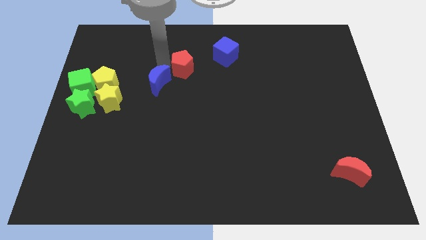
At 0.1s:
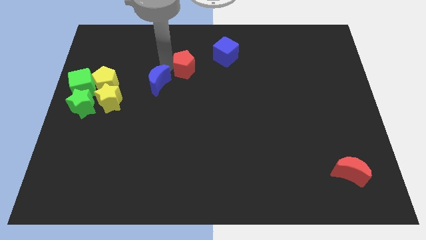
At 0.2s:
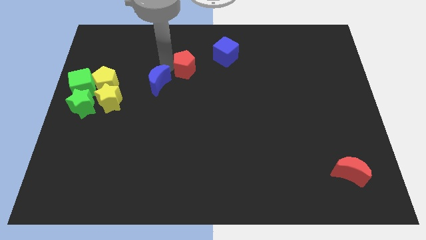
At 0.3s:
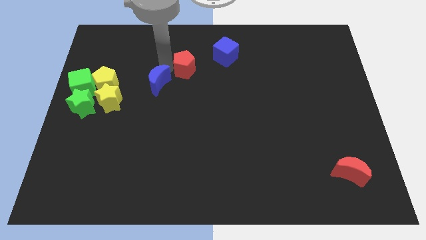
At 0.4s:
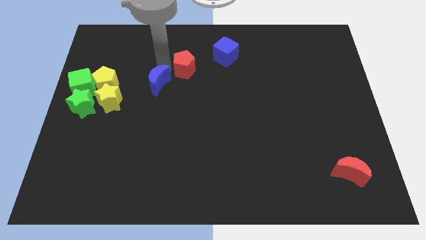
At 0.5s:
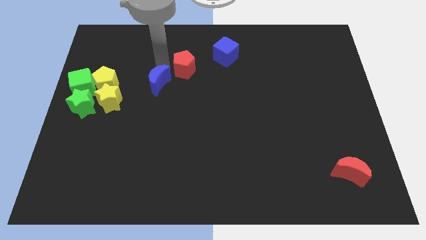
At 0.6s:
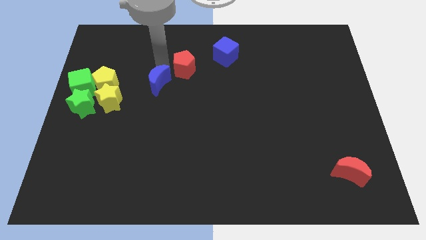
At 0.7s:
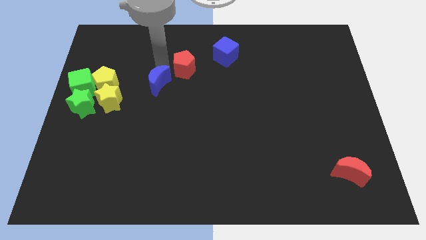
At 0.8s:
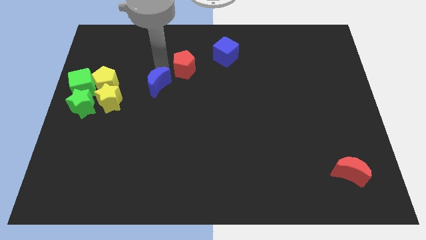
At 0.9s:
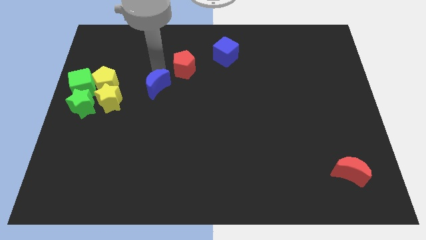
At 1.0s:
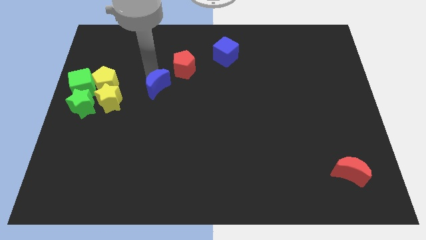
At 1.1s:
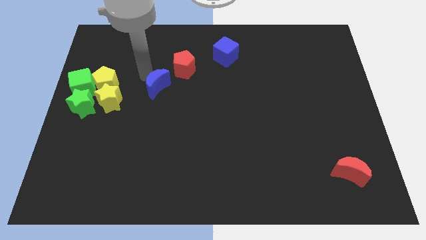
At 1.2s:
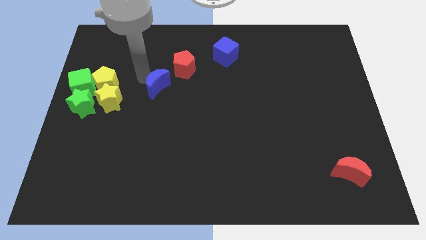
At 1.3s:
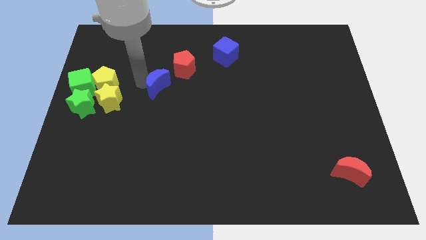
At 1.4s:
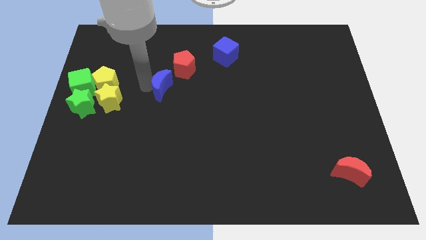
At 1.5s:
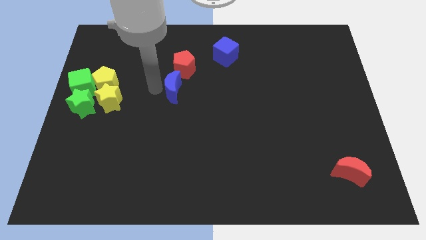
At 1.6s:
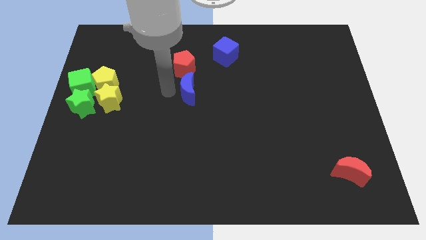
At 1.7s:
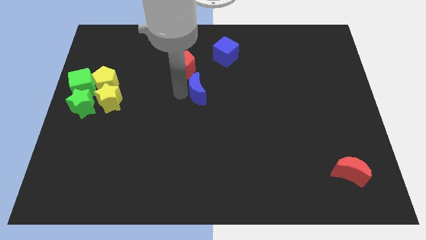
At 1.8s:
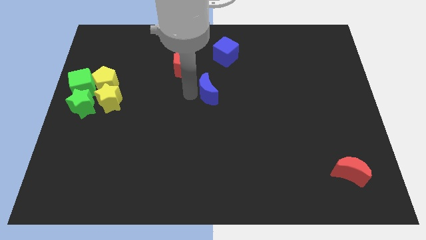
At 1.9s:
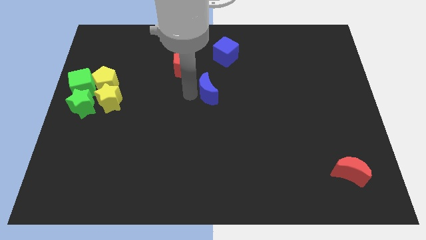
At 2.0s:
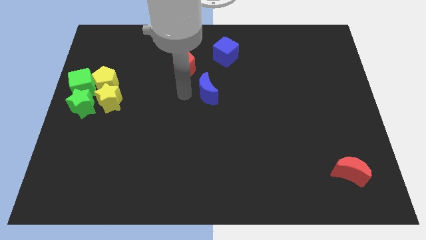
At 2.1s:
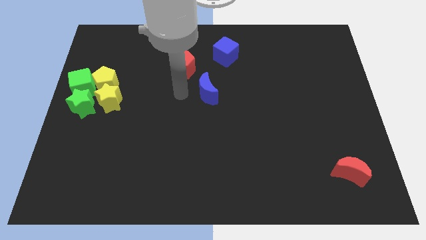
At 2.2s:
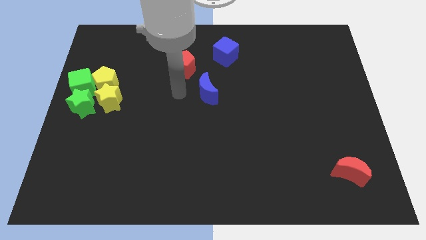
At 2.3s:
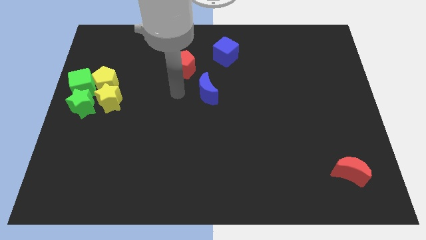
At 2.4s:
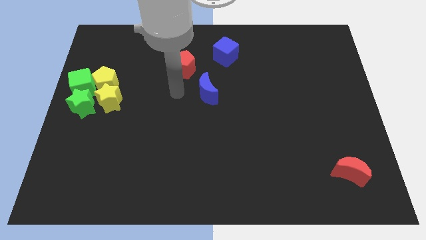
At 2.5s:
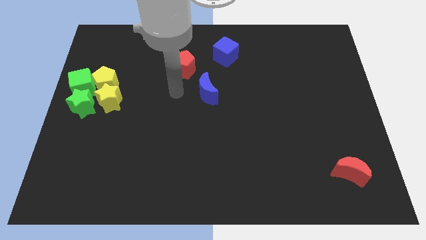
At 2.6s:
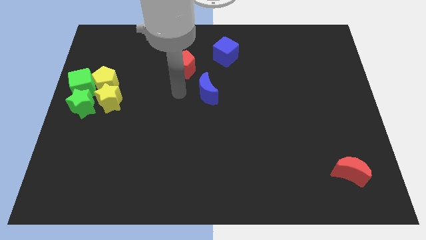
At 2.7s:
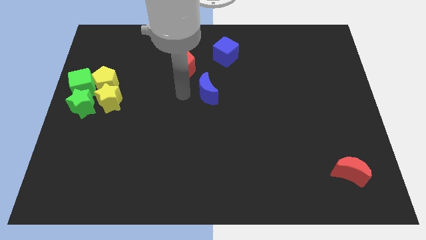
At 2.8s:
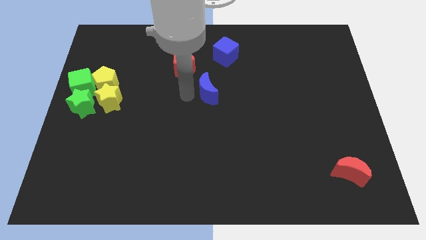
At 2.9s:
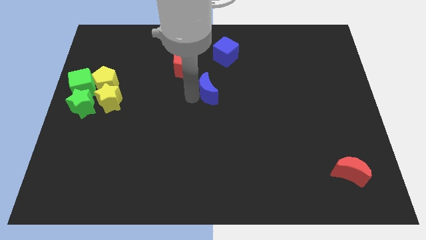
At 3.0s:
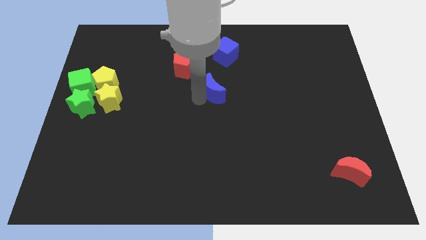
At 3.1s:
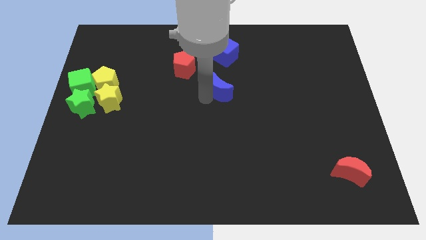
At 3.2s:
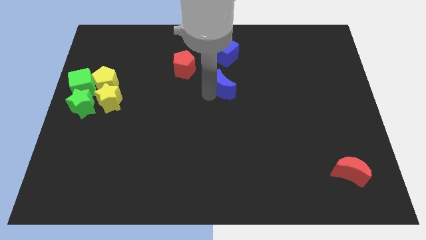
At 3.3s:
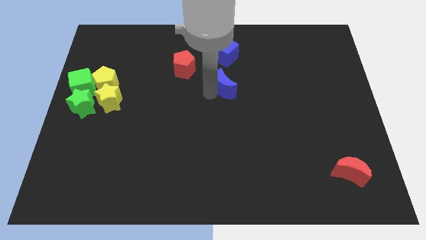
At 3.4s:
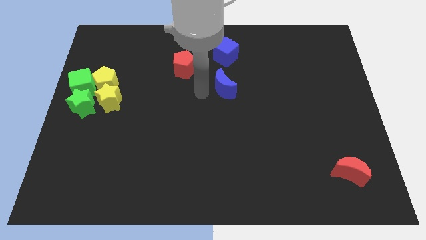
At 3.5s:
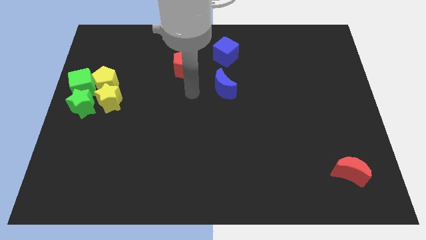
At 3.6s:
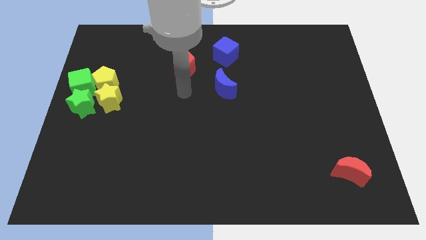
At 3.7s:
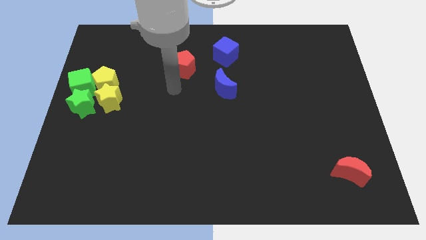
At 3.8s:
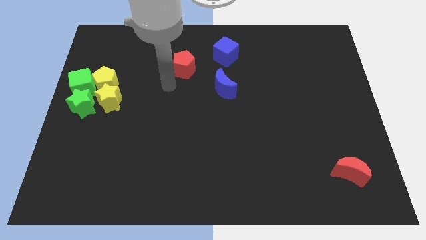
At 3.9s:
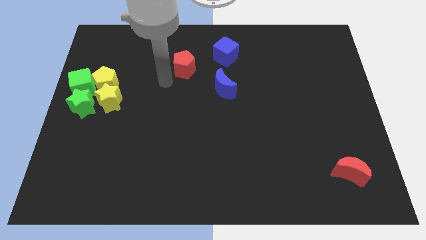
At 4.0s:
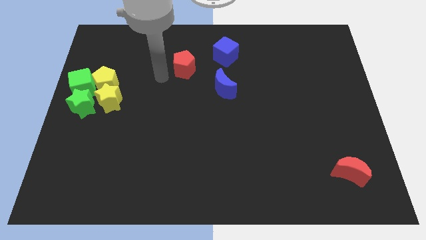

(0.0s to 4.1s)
push the blue crescent vertically at the bottom of the blue cube

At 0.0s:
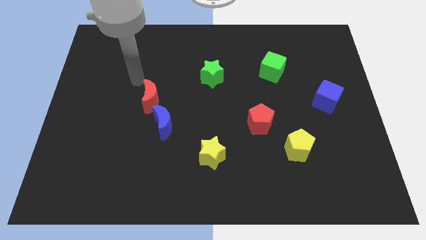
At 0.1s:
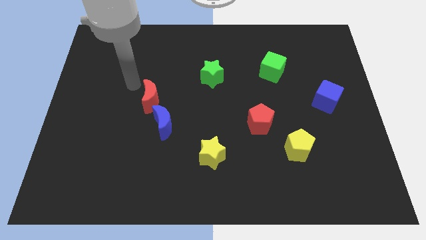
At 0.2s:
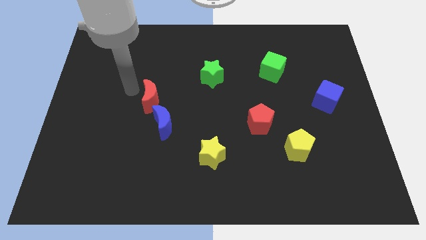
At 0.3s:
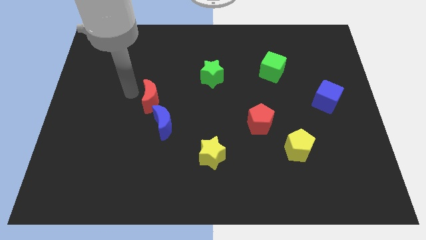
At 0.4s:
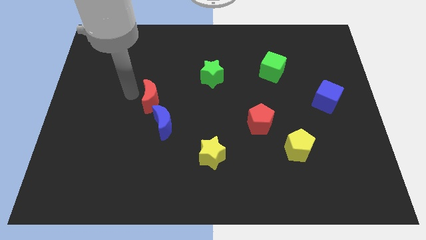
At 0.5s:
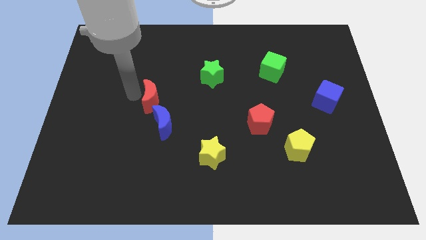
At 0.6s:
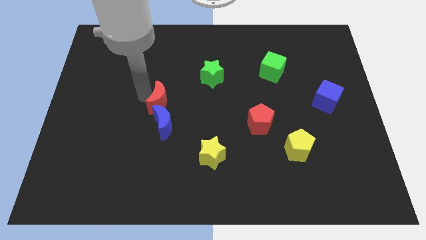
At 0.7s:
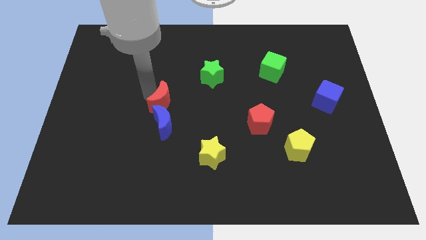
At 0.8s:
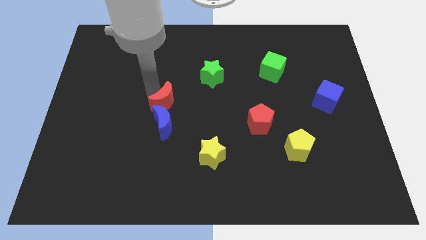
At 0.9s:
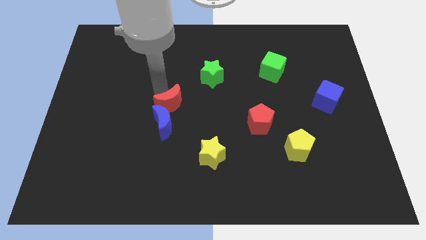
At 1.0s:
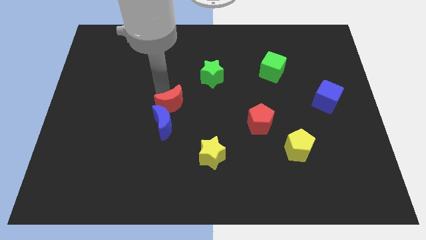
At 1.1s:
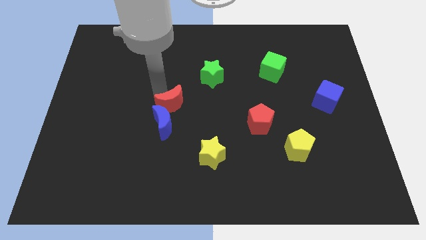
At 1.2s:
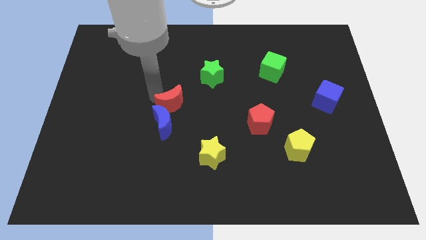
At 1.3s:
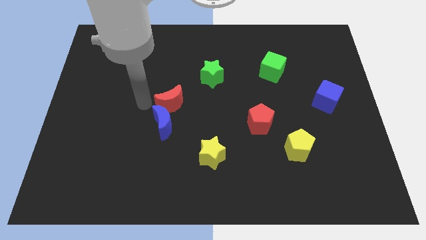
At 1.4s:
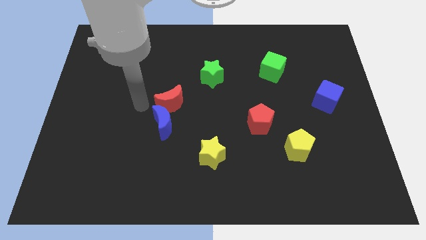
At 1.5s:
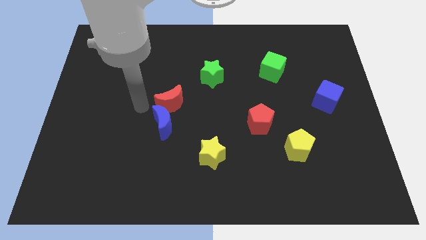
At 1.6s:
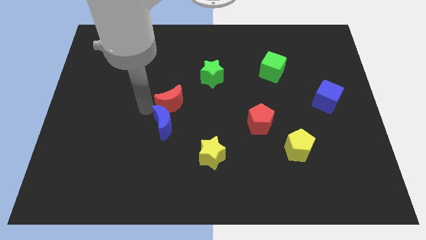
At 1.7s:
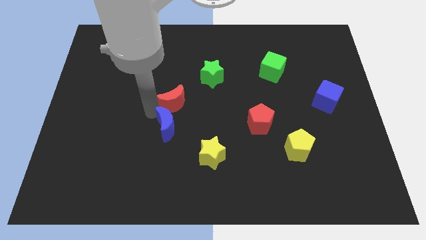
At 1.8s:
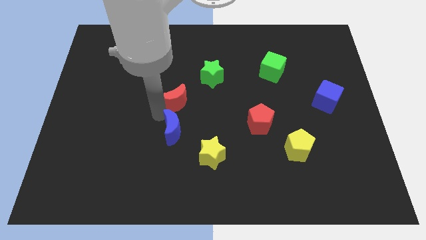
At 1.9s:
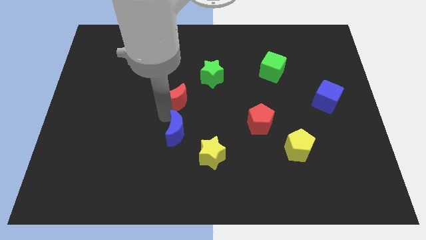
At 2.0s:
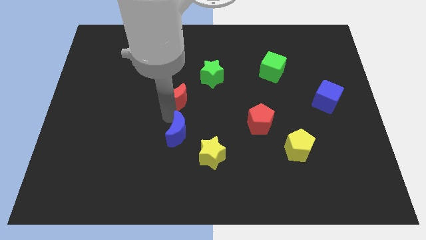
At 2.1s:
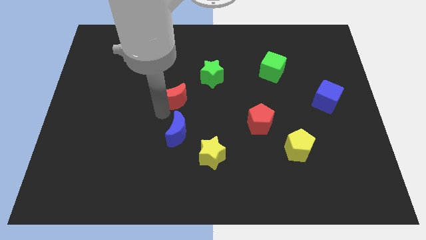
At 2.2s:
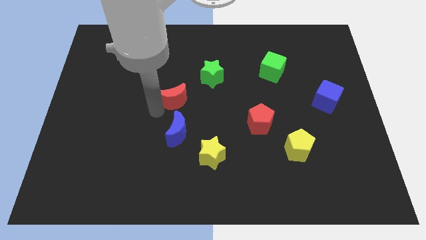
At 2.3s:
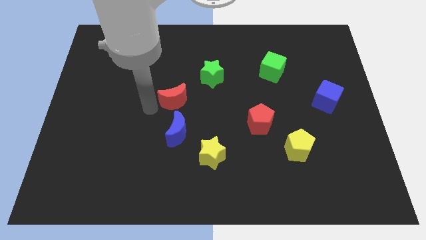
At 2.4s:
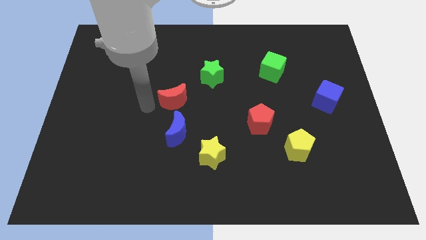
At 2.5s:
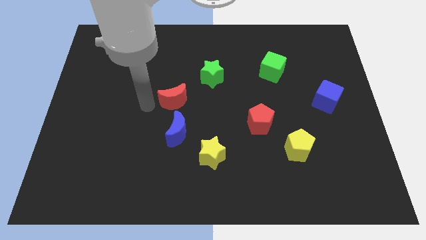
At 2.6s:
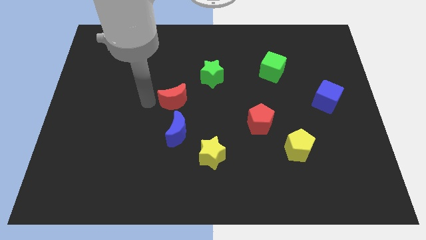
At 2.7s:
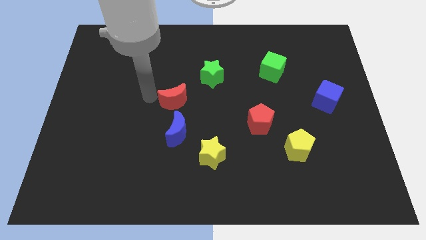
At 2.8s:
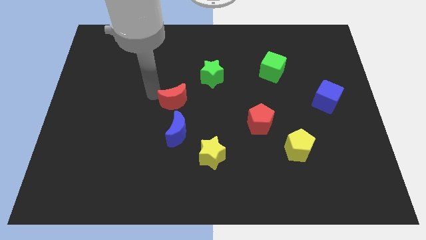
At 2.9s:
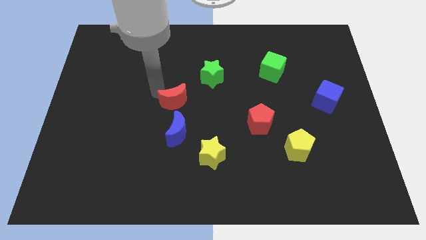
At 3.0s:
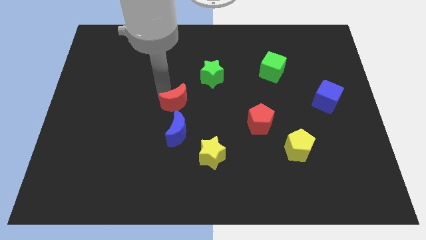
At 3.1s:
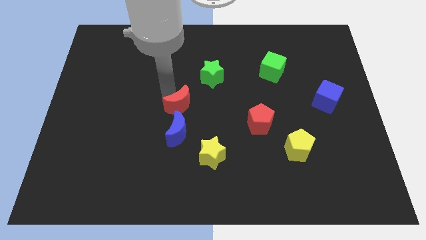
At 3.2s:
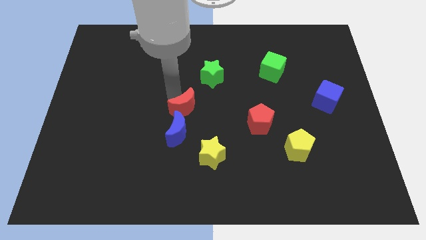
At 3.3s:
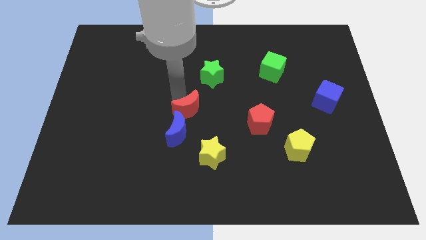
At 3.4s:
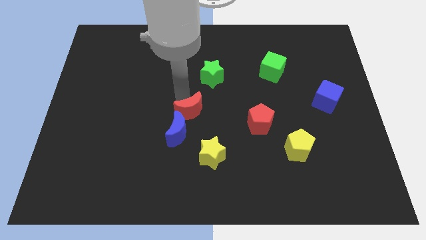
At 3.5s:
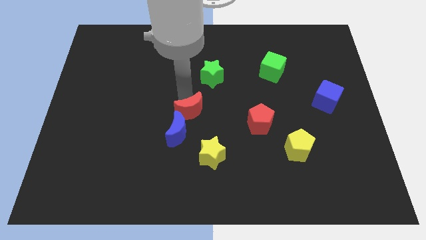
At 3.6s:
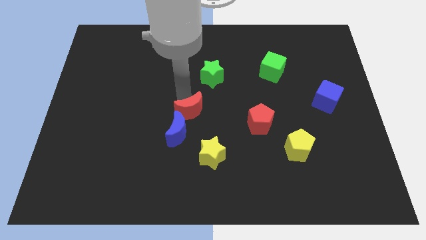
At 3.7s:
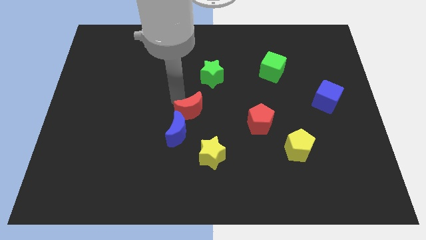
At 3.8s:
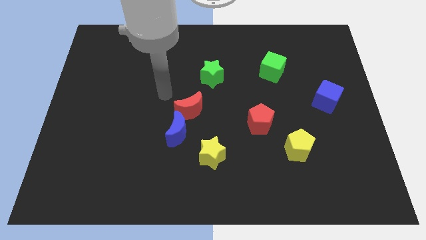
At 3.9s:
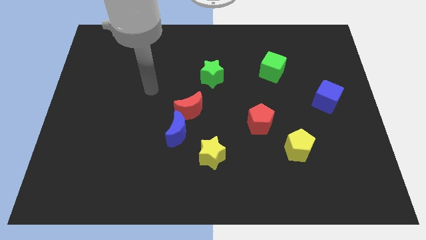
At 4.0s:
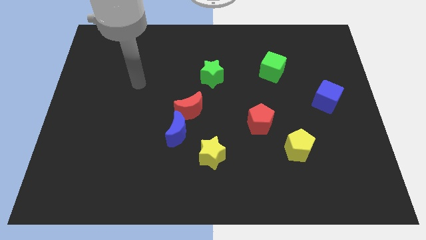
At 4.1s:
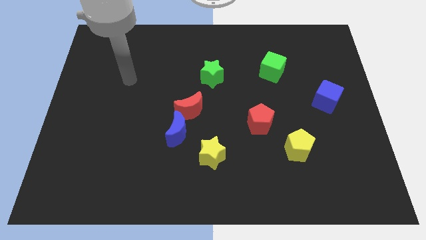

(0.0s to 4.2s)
slightly move the red moon towards the right

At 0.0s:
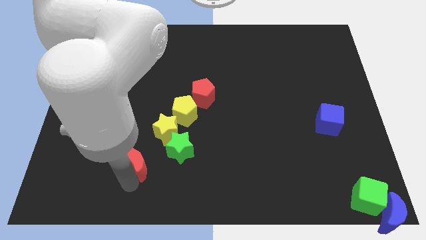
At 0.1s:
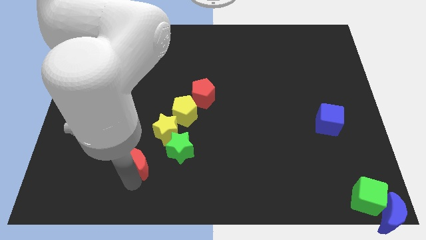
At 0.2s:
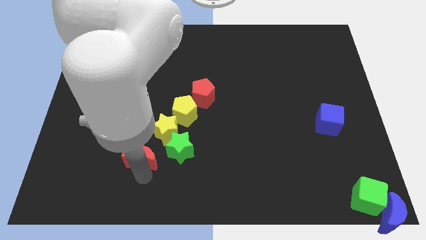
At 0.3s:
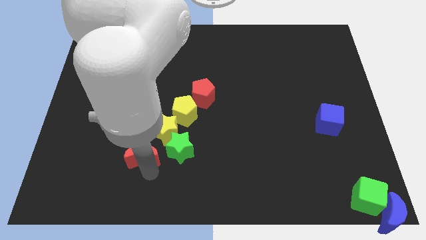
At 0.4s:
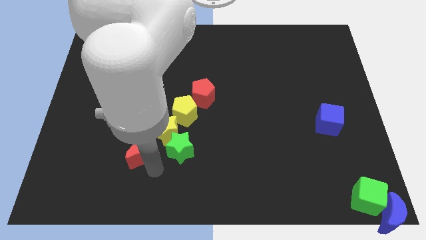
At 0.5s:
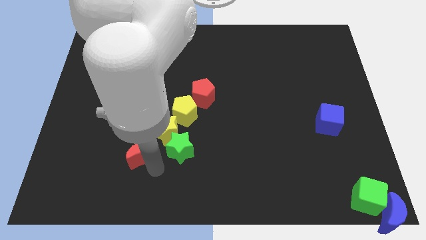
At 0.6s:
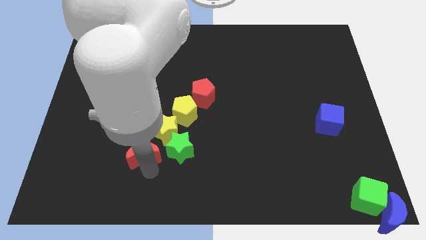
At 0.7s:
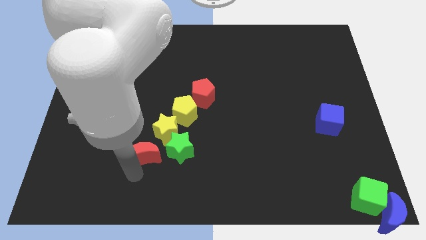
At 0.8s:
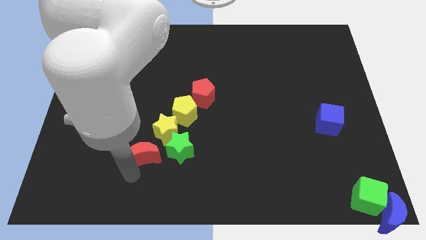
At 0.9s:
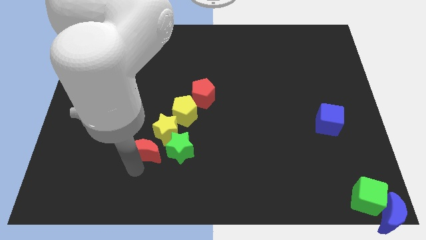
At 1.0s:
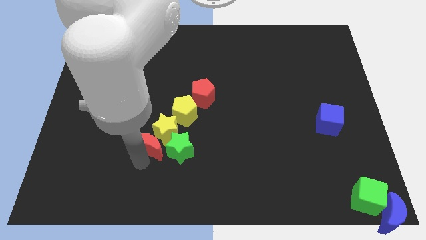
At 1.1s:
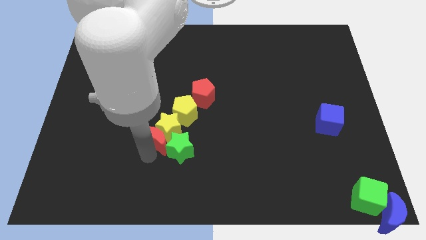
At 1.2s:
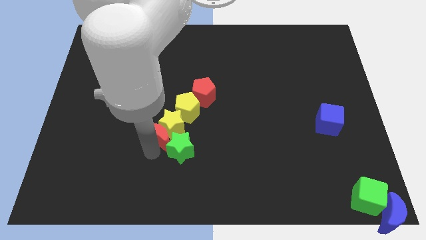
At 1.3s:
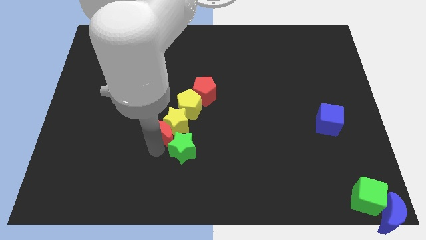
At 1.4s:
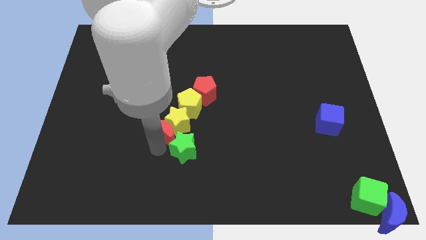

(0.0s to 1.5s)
move the red moon into the bottom left of the yellow star
